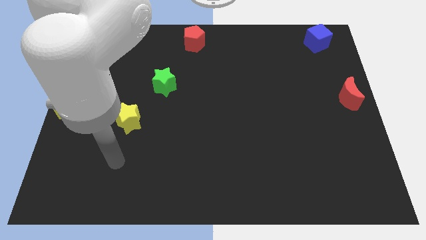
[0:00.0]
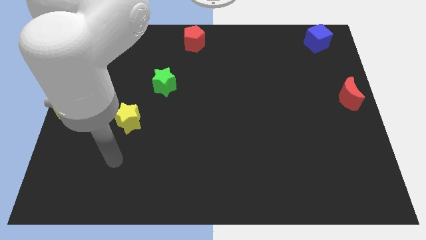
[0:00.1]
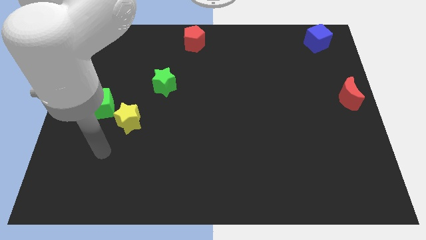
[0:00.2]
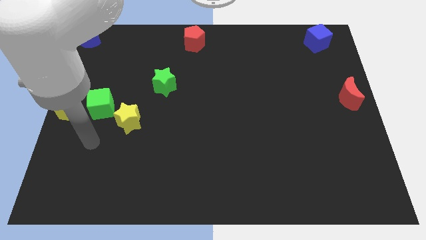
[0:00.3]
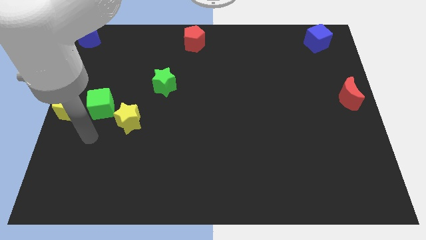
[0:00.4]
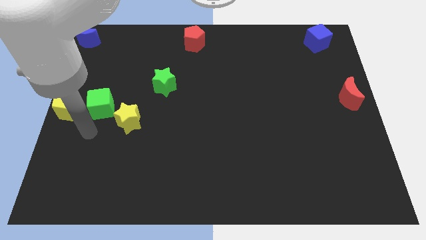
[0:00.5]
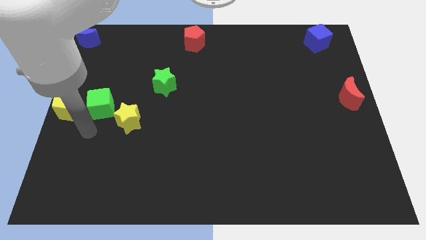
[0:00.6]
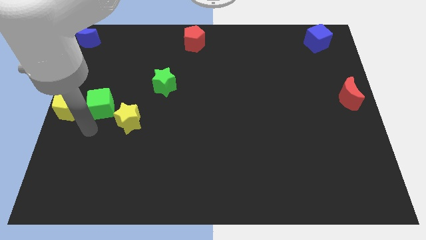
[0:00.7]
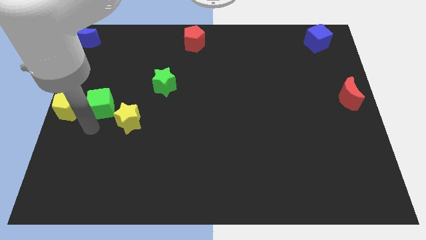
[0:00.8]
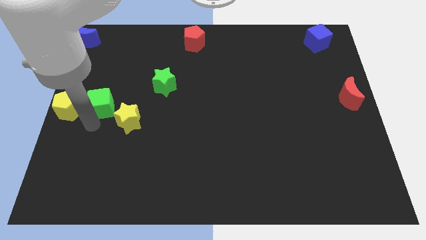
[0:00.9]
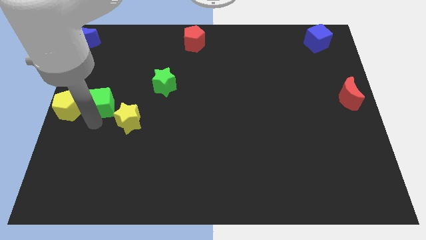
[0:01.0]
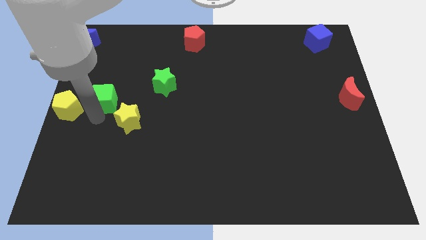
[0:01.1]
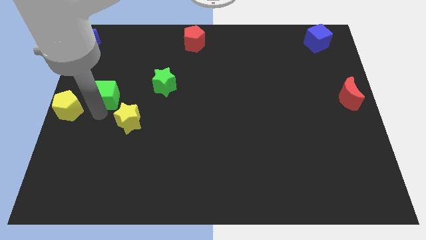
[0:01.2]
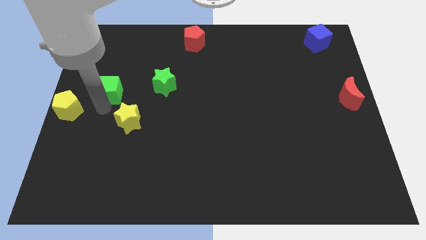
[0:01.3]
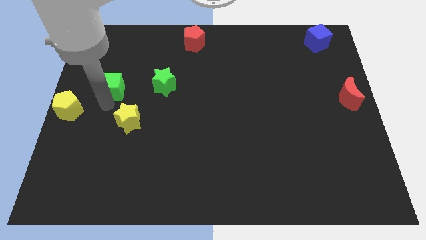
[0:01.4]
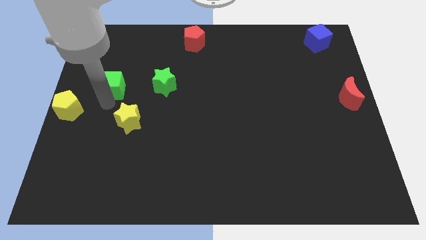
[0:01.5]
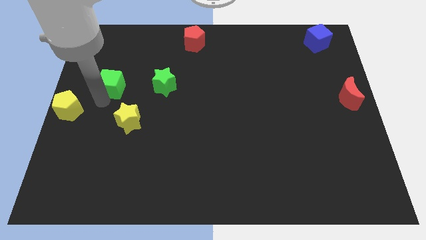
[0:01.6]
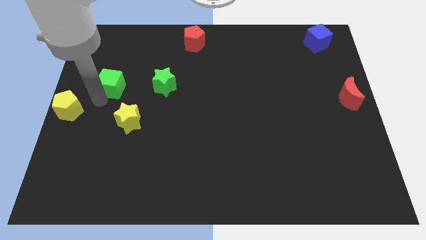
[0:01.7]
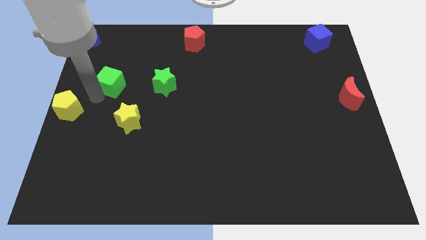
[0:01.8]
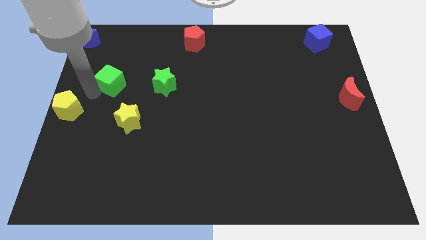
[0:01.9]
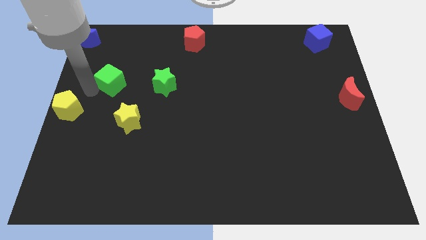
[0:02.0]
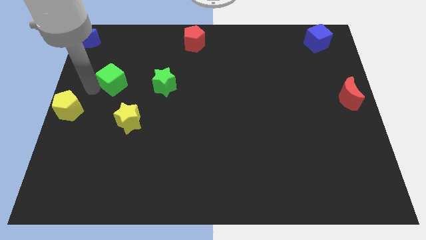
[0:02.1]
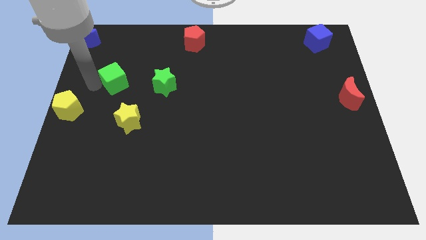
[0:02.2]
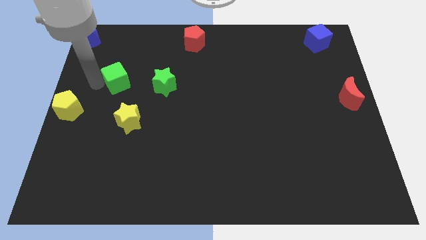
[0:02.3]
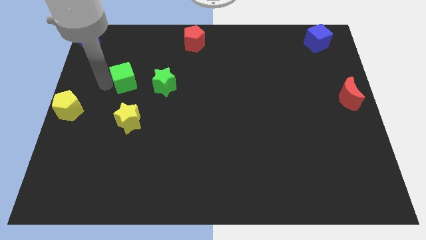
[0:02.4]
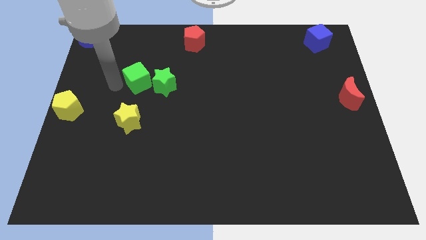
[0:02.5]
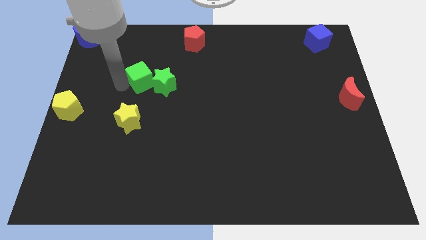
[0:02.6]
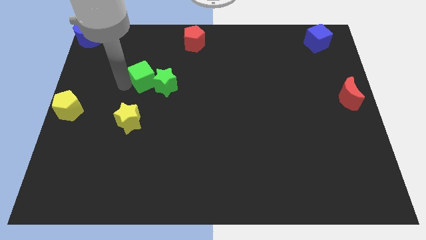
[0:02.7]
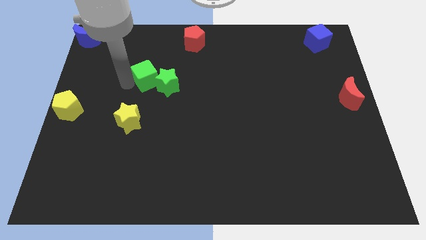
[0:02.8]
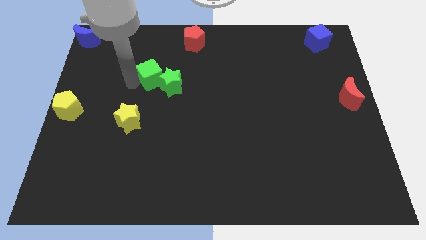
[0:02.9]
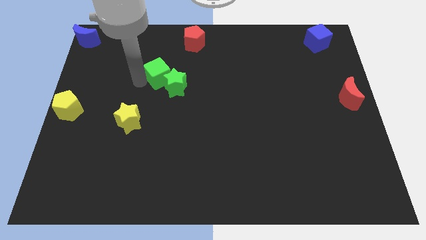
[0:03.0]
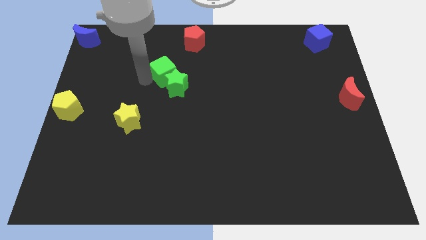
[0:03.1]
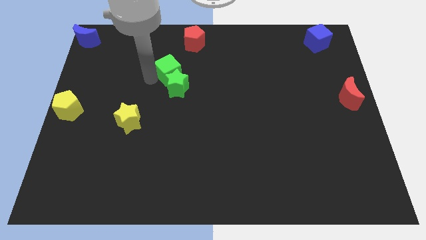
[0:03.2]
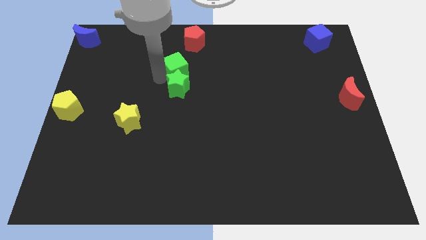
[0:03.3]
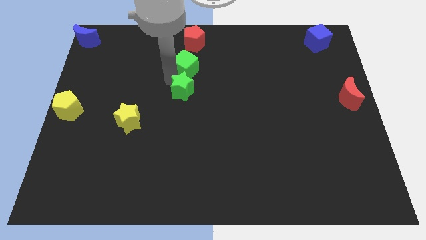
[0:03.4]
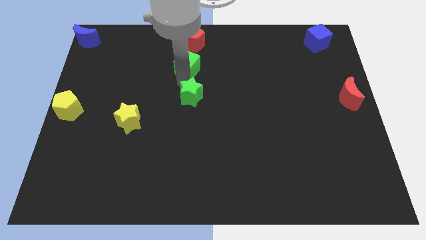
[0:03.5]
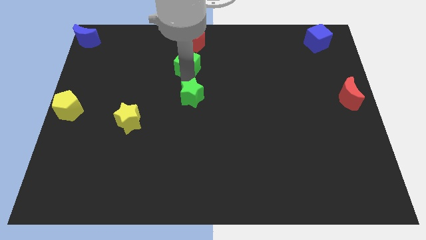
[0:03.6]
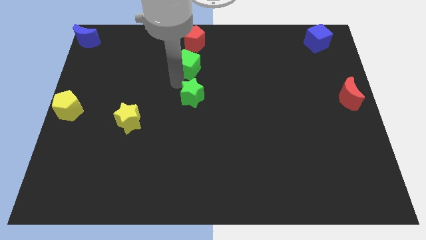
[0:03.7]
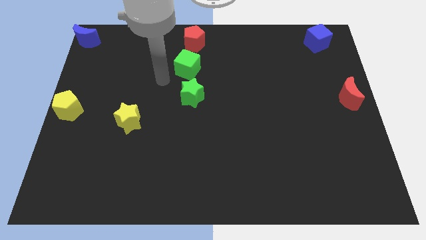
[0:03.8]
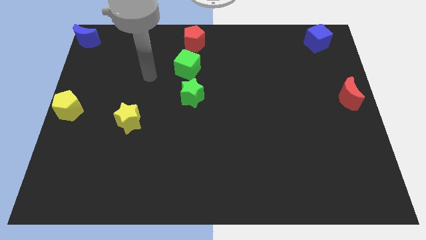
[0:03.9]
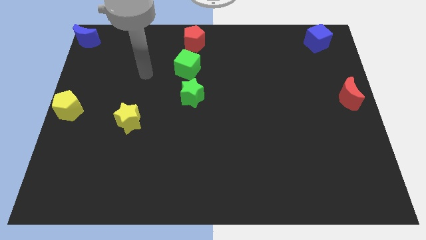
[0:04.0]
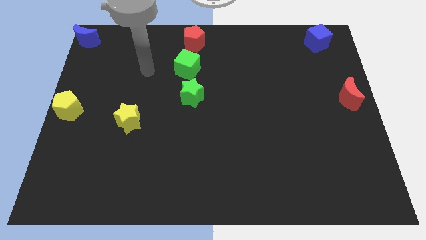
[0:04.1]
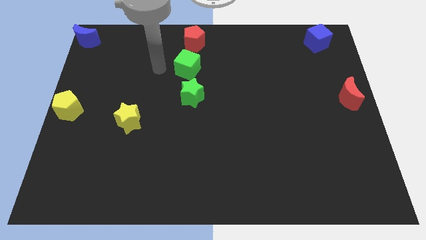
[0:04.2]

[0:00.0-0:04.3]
push the green cube to the bottom side of the red pentagon

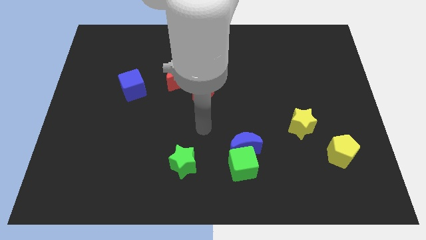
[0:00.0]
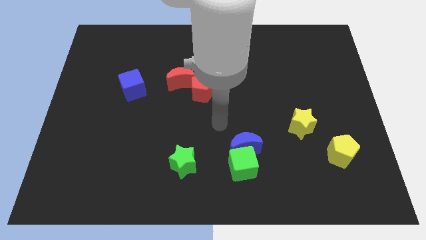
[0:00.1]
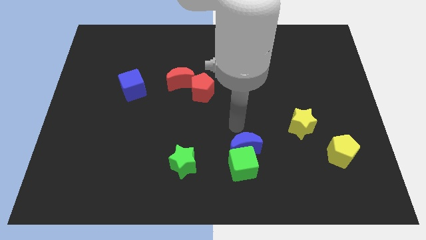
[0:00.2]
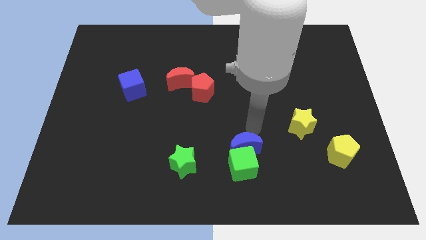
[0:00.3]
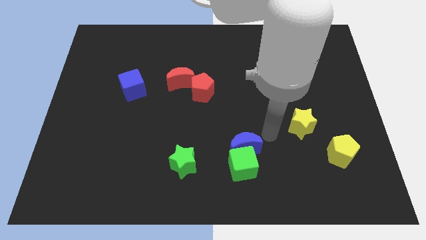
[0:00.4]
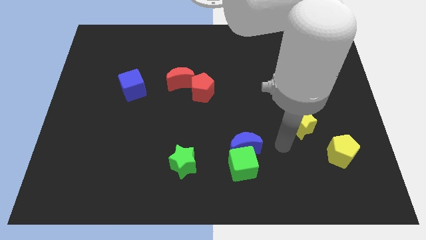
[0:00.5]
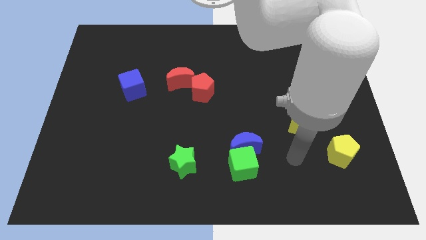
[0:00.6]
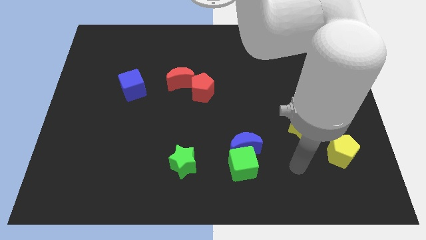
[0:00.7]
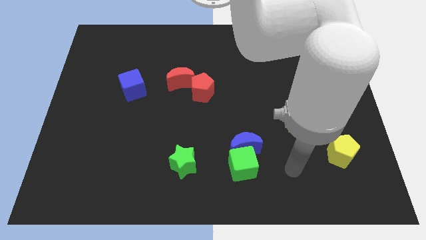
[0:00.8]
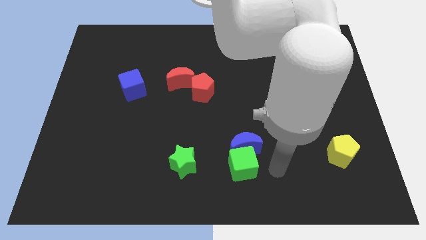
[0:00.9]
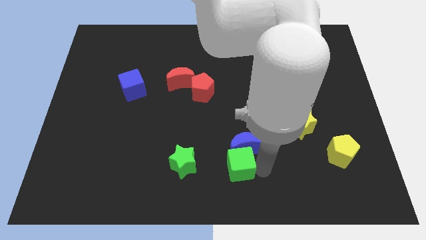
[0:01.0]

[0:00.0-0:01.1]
tap your arm to the right side of green cube

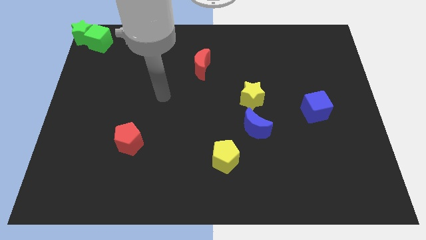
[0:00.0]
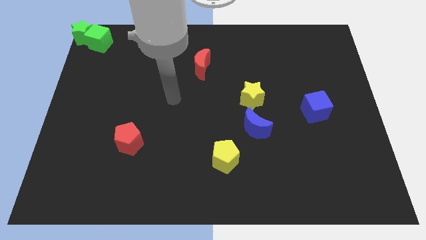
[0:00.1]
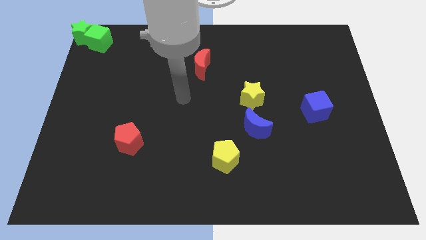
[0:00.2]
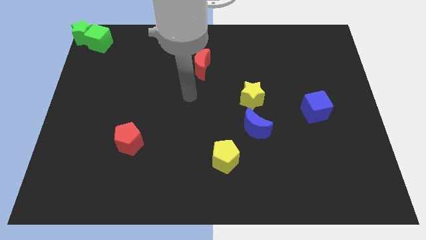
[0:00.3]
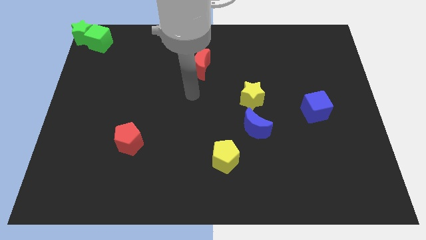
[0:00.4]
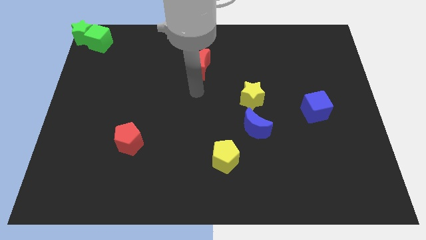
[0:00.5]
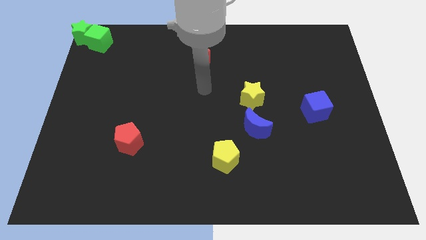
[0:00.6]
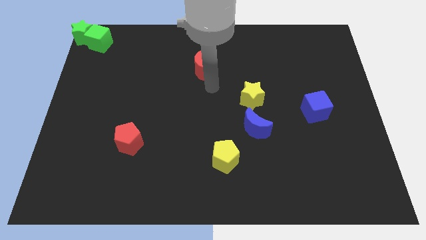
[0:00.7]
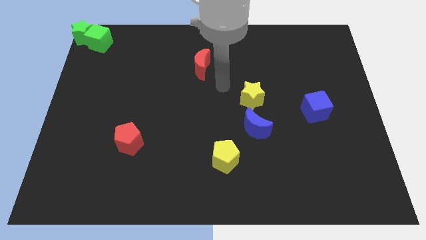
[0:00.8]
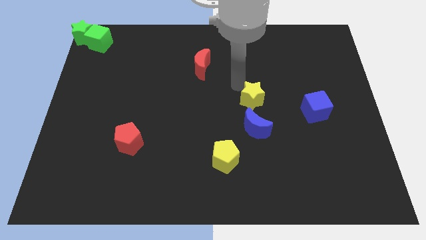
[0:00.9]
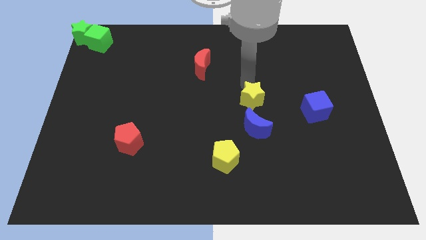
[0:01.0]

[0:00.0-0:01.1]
point your hand at the top side of the yellow star

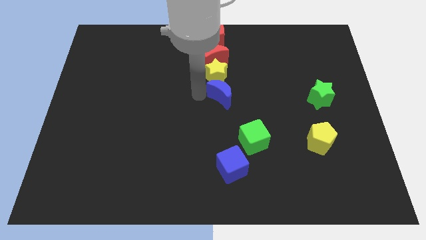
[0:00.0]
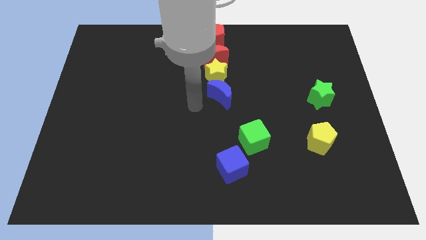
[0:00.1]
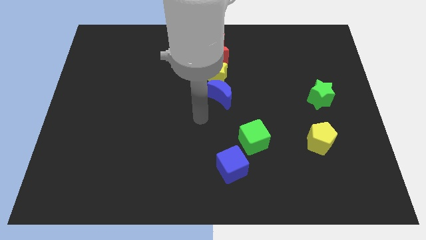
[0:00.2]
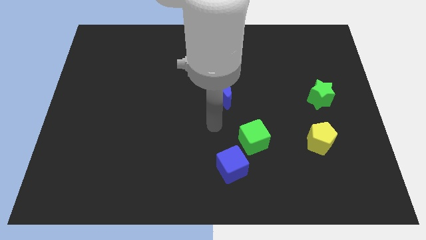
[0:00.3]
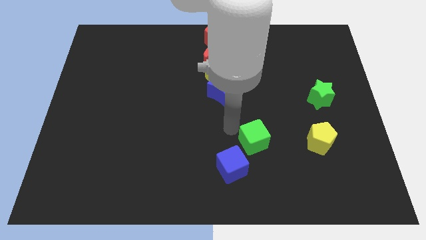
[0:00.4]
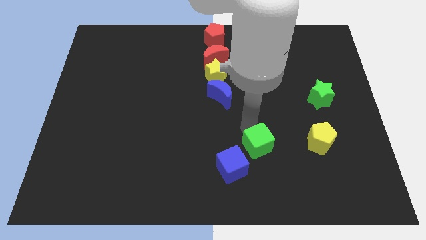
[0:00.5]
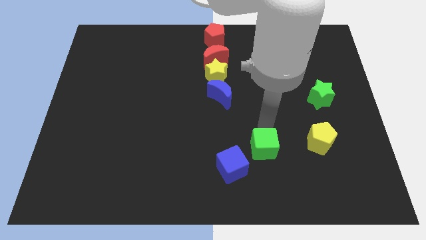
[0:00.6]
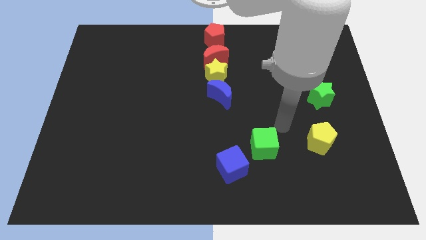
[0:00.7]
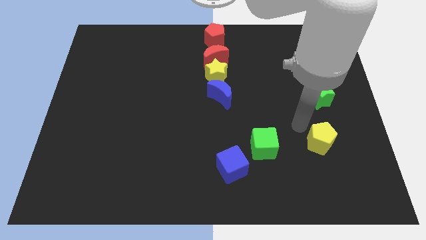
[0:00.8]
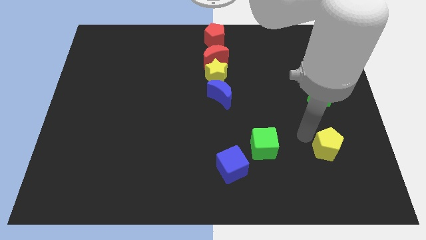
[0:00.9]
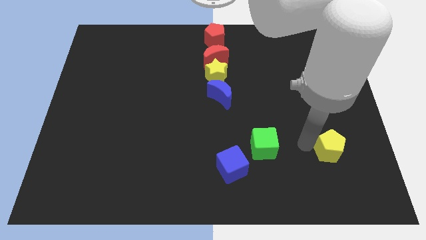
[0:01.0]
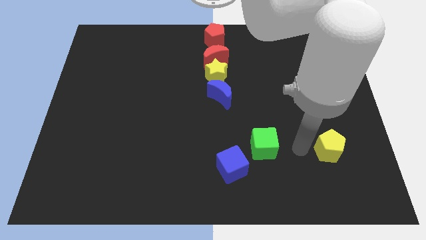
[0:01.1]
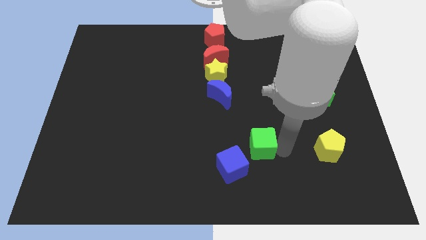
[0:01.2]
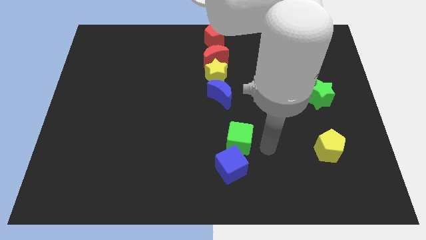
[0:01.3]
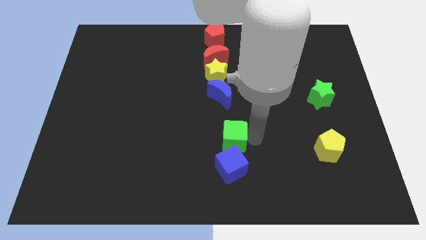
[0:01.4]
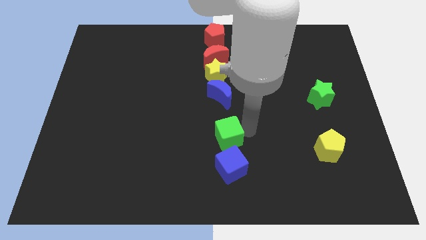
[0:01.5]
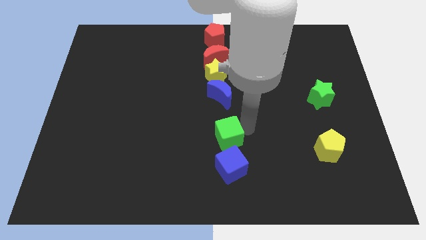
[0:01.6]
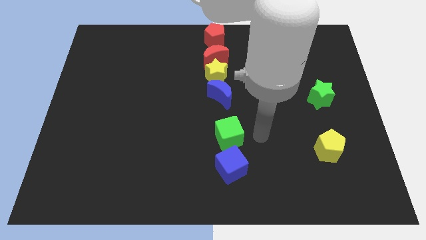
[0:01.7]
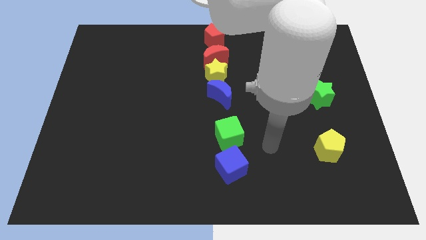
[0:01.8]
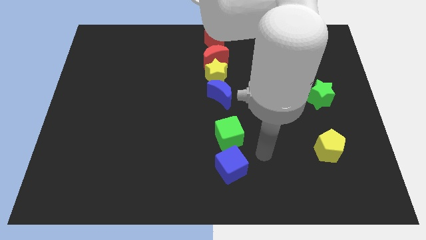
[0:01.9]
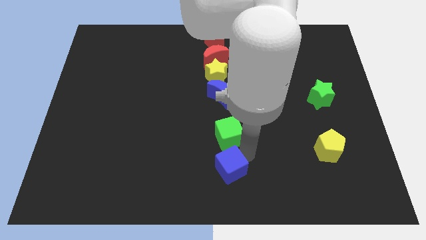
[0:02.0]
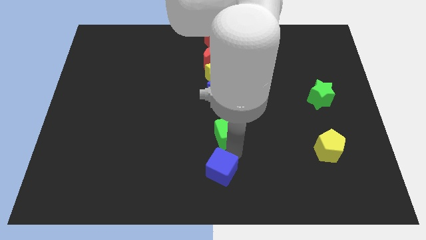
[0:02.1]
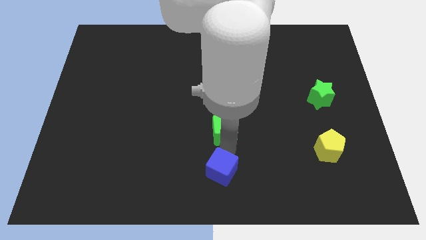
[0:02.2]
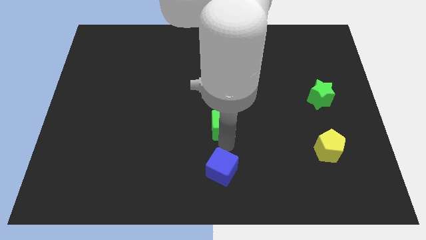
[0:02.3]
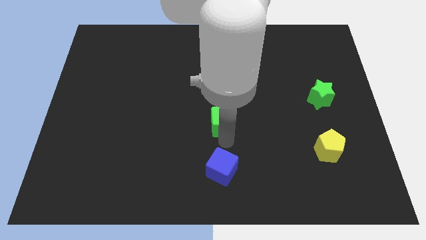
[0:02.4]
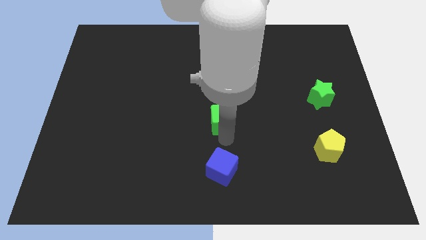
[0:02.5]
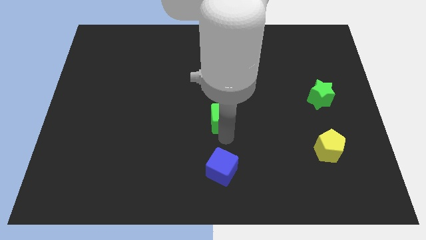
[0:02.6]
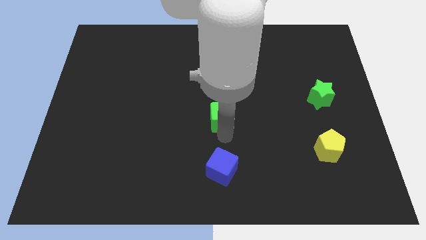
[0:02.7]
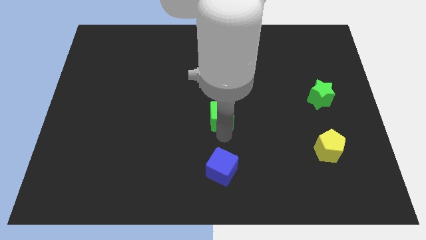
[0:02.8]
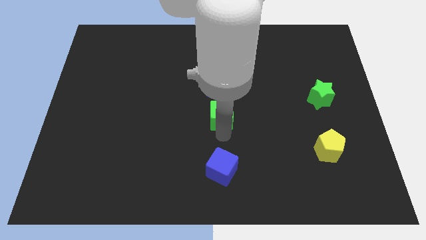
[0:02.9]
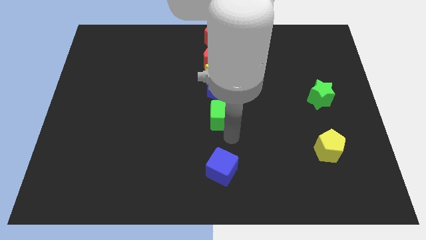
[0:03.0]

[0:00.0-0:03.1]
place green cube above blue cube
